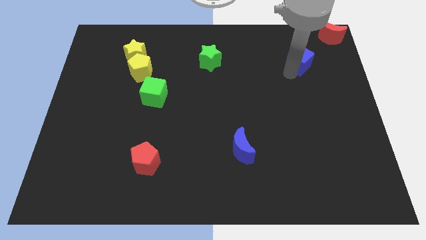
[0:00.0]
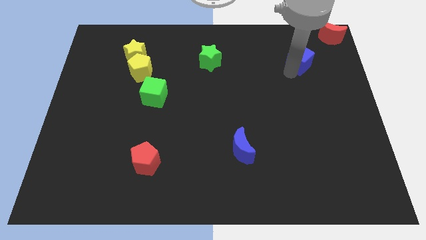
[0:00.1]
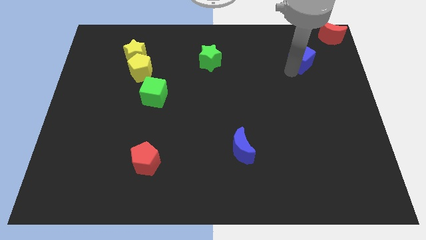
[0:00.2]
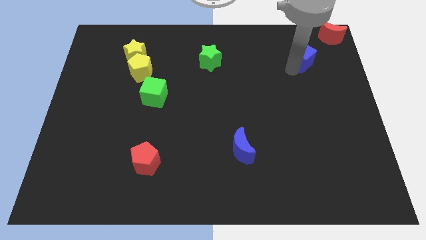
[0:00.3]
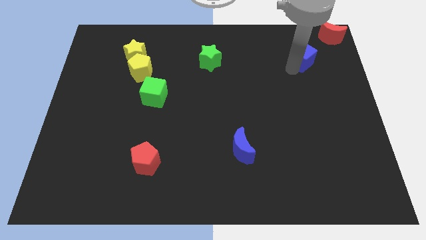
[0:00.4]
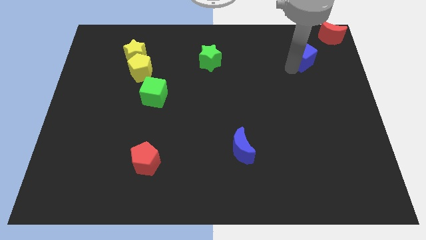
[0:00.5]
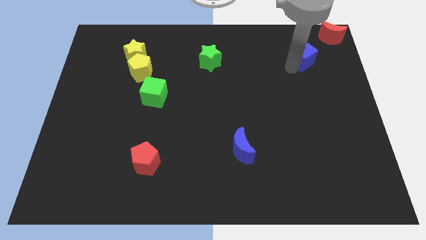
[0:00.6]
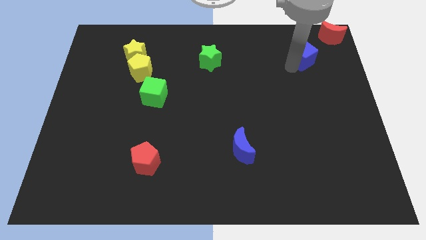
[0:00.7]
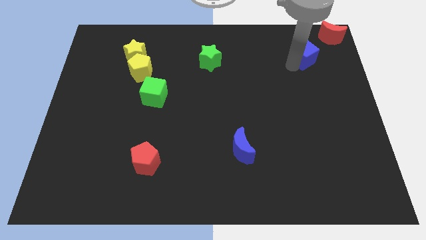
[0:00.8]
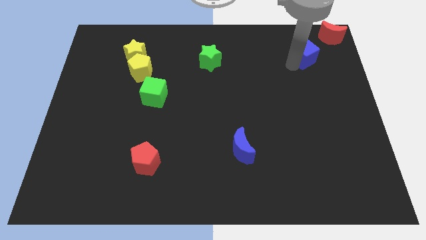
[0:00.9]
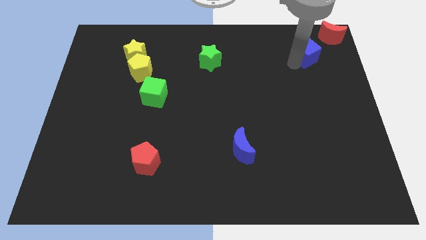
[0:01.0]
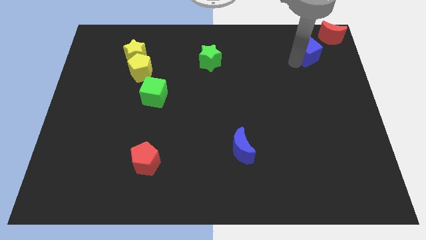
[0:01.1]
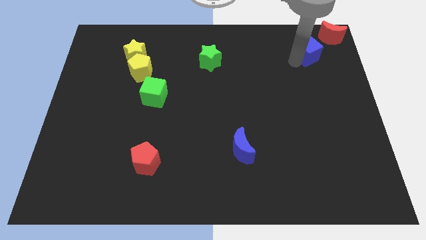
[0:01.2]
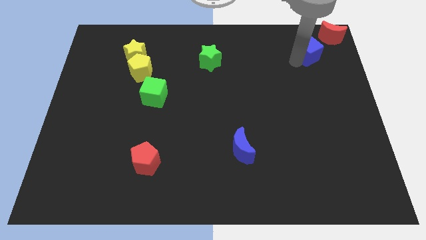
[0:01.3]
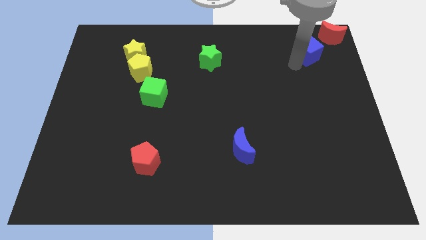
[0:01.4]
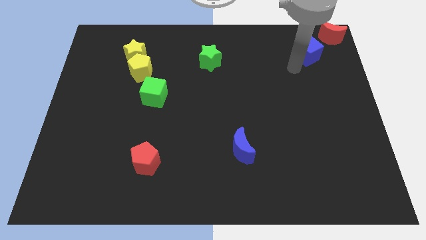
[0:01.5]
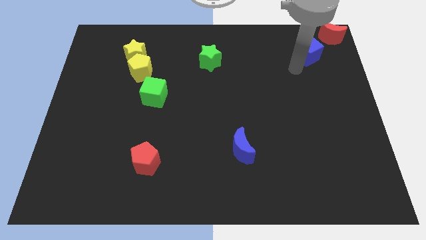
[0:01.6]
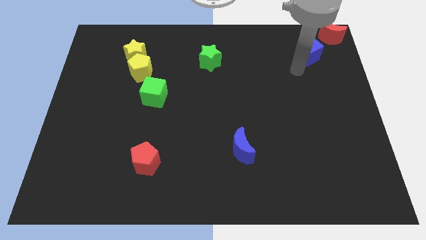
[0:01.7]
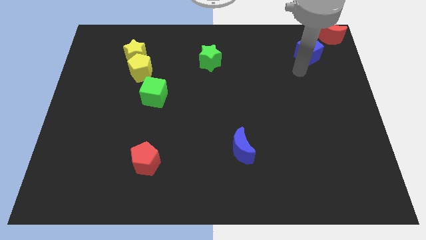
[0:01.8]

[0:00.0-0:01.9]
push the blue cube near to the red crescent

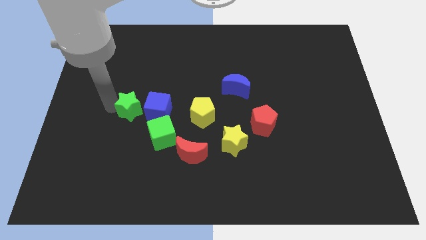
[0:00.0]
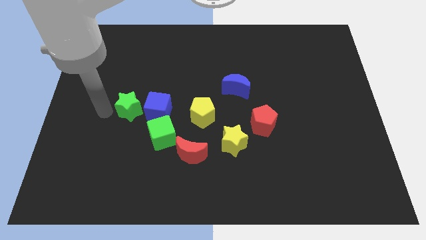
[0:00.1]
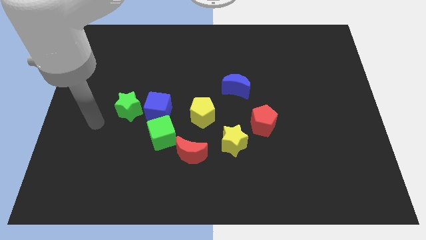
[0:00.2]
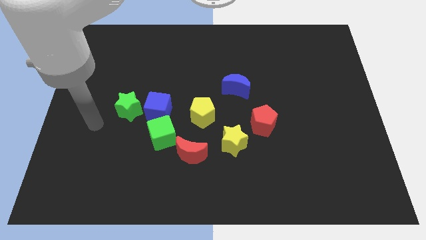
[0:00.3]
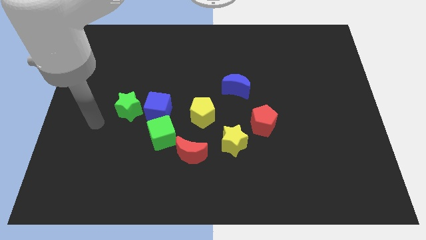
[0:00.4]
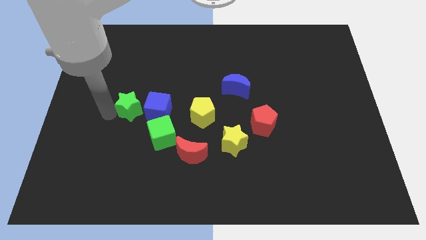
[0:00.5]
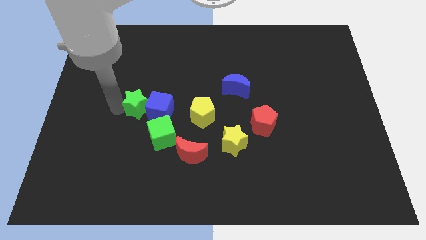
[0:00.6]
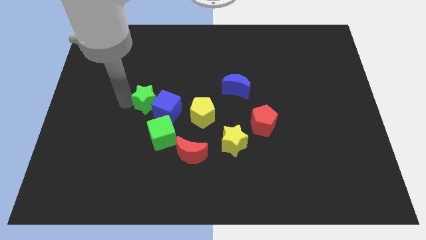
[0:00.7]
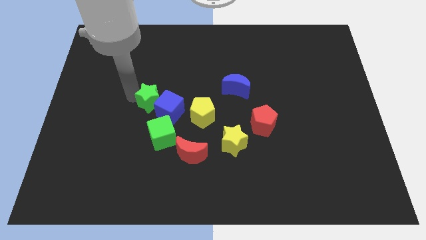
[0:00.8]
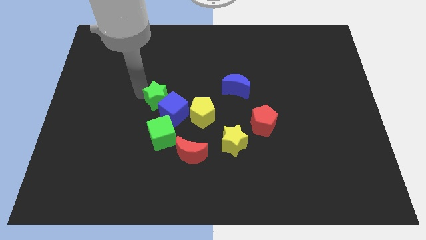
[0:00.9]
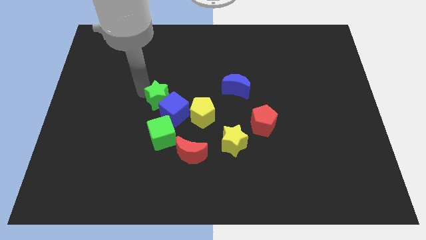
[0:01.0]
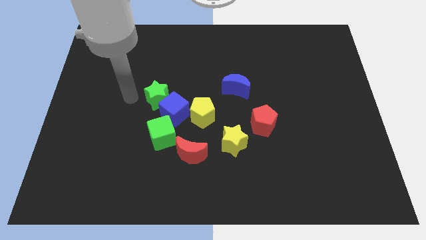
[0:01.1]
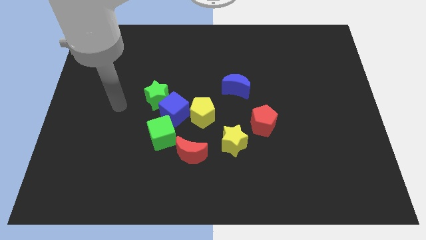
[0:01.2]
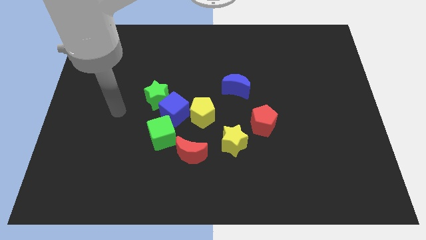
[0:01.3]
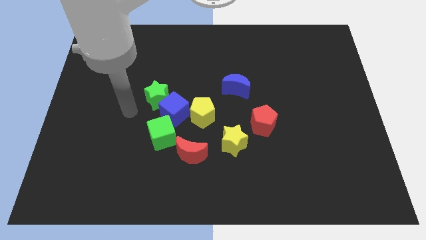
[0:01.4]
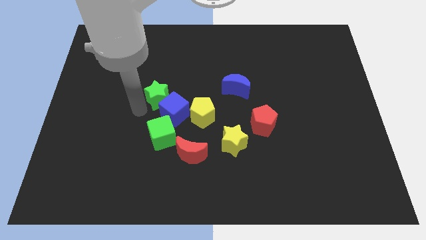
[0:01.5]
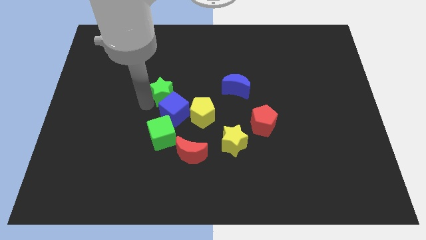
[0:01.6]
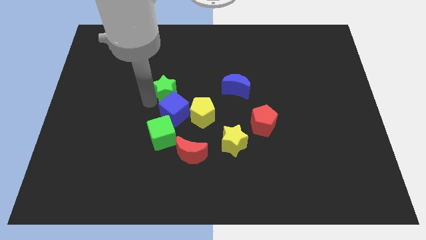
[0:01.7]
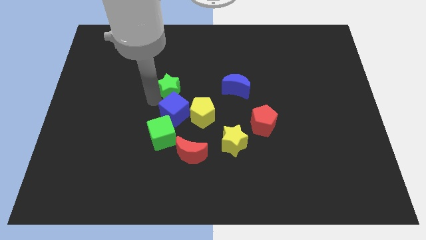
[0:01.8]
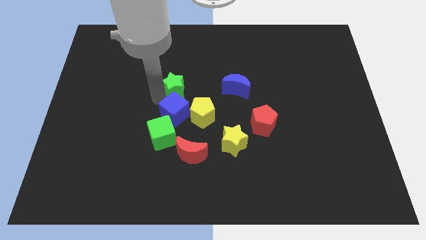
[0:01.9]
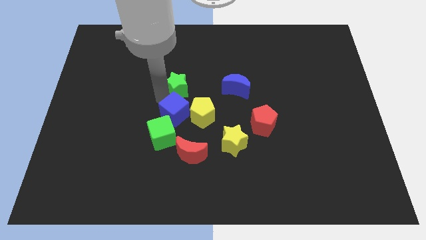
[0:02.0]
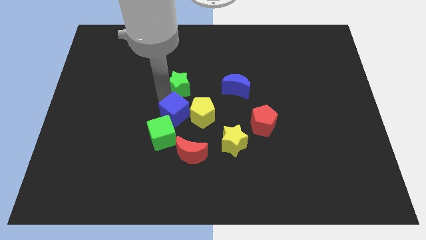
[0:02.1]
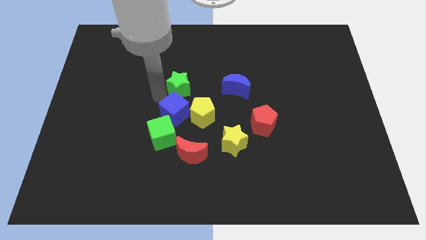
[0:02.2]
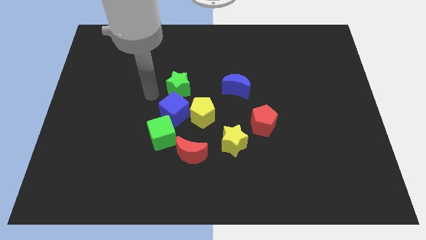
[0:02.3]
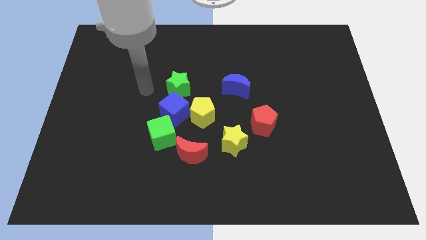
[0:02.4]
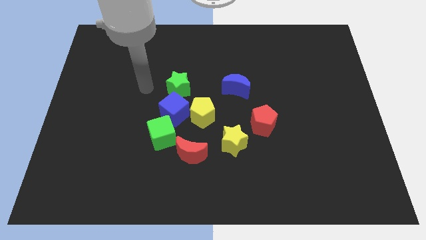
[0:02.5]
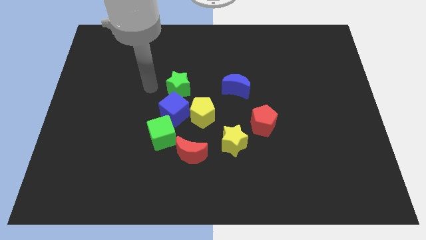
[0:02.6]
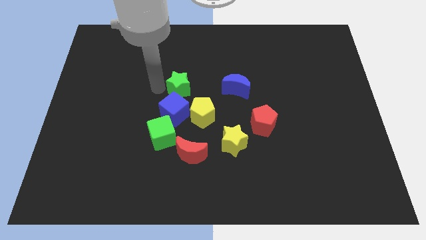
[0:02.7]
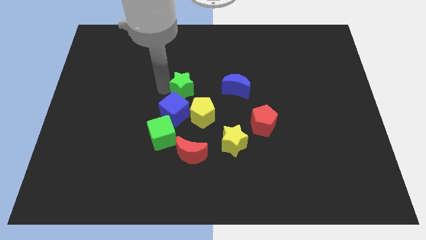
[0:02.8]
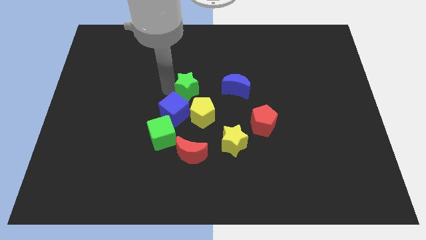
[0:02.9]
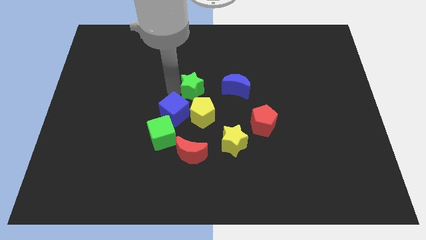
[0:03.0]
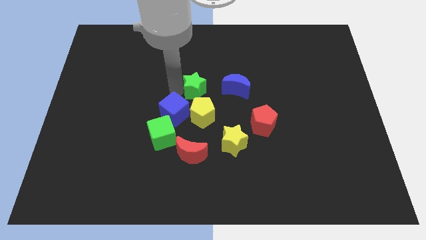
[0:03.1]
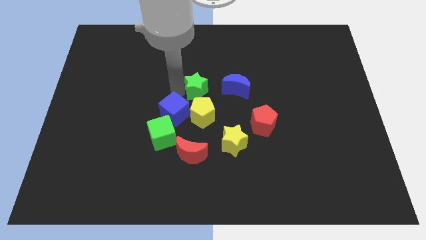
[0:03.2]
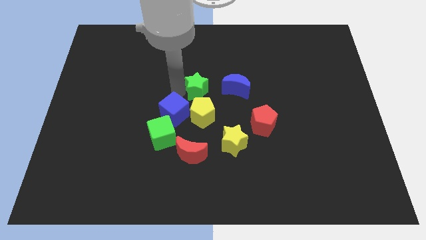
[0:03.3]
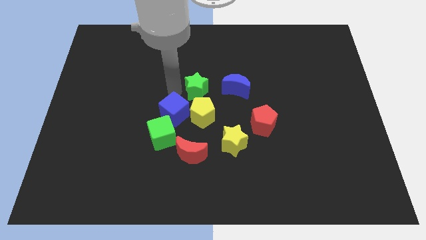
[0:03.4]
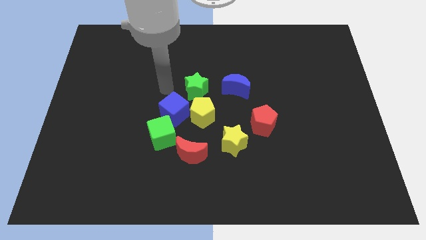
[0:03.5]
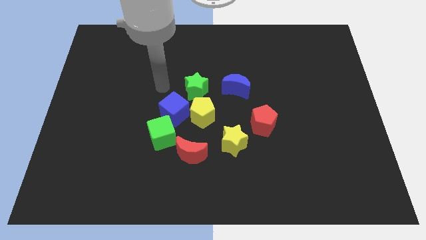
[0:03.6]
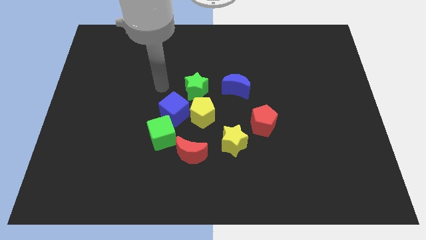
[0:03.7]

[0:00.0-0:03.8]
slide the green star diagonally top right to the blue cube

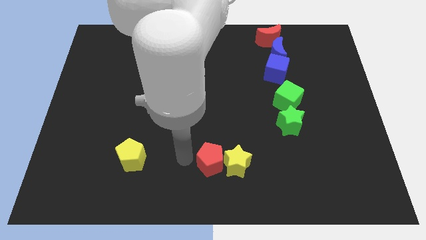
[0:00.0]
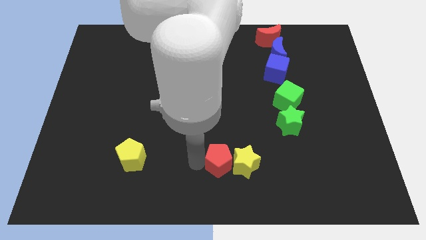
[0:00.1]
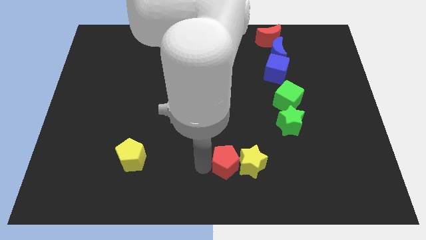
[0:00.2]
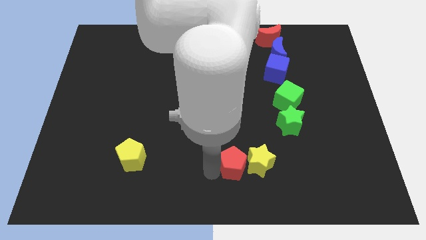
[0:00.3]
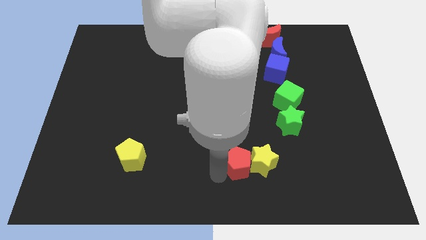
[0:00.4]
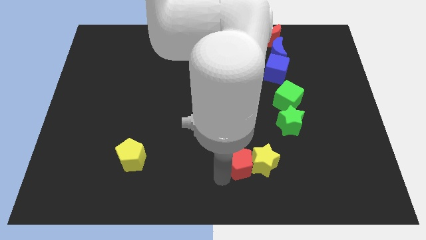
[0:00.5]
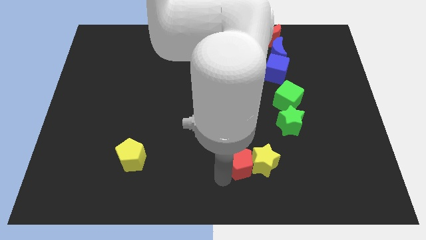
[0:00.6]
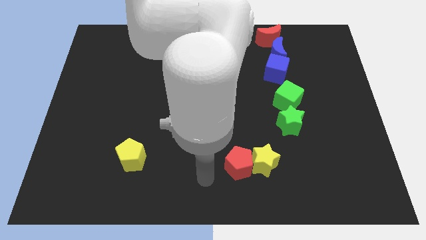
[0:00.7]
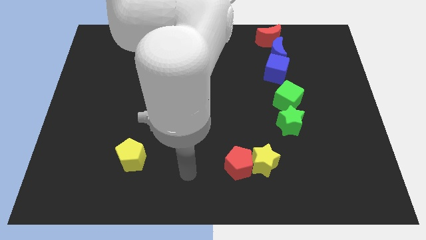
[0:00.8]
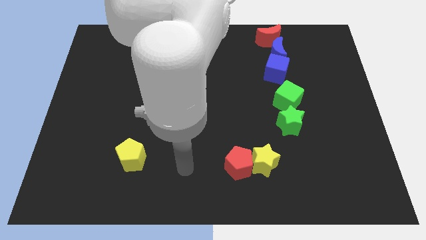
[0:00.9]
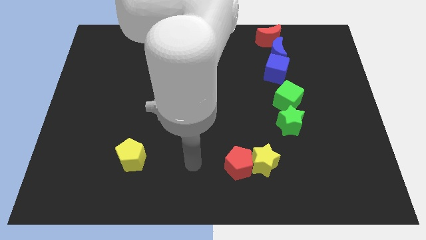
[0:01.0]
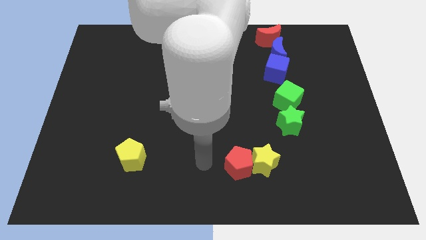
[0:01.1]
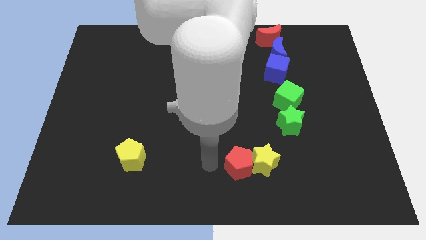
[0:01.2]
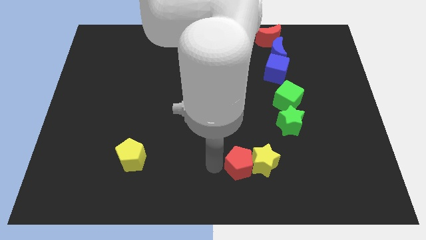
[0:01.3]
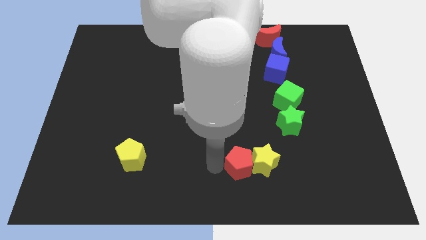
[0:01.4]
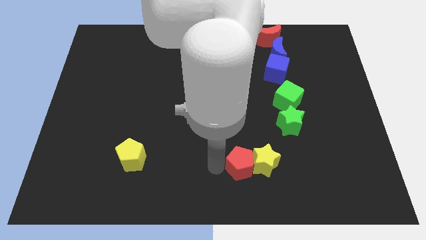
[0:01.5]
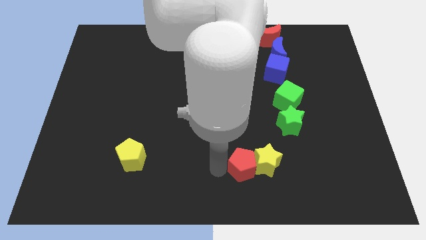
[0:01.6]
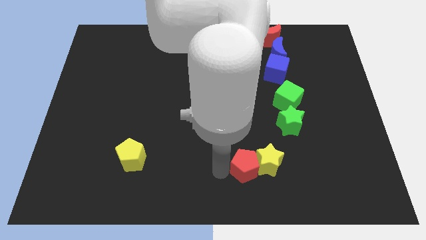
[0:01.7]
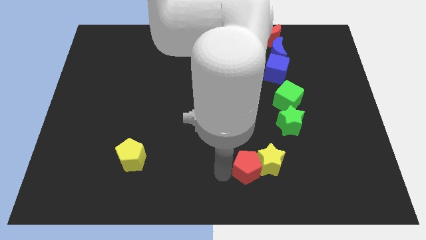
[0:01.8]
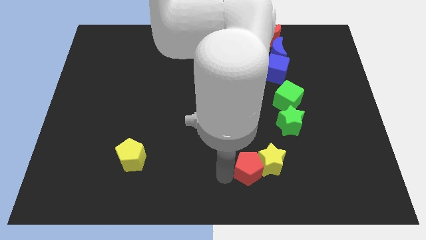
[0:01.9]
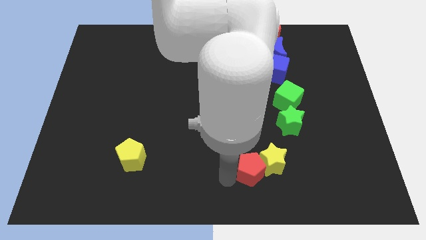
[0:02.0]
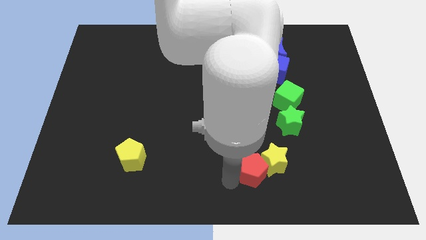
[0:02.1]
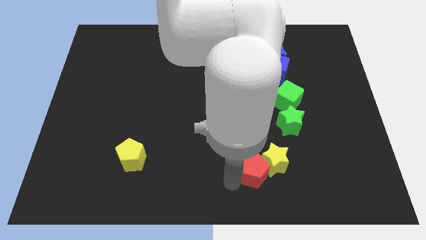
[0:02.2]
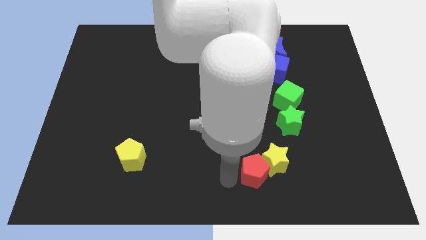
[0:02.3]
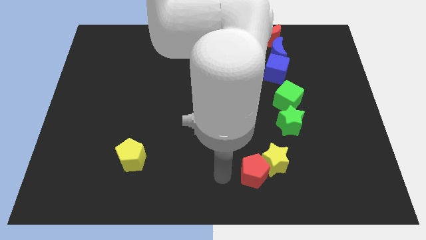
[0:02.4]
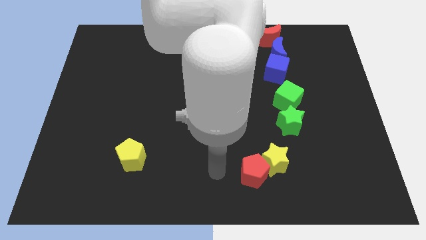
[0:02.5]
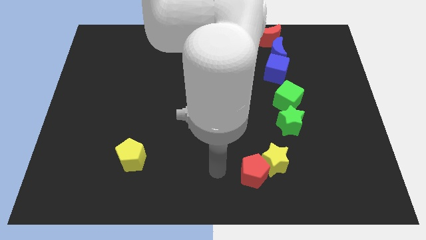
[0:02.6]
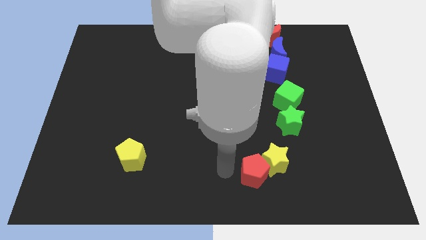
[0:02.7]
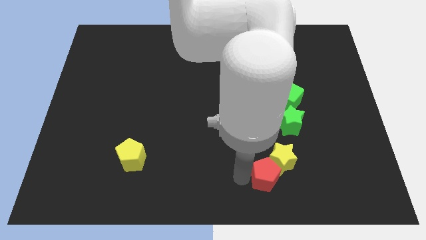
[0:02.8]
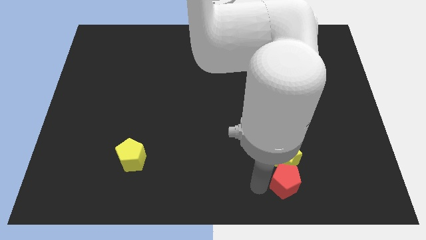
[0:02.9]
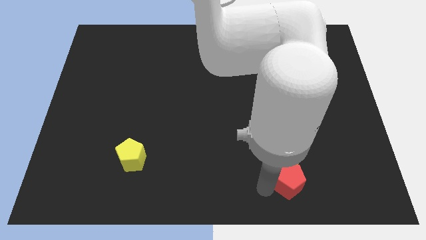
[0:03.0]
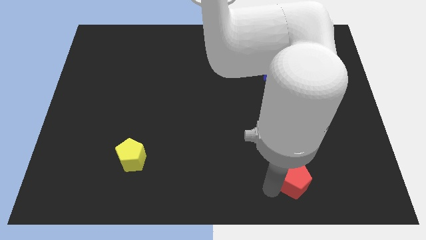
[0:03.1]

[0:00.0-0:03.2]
place the red pentagon along with yellow star at bottom of the green star

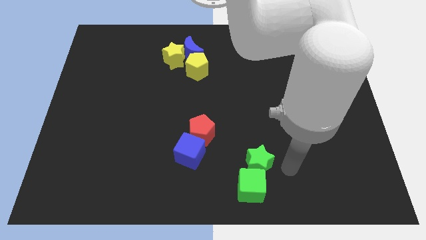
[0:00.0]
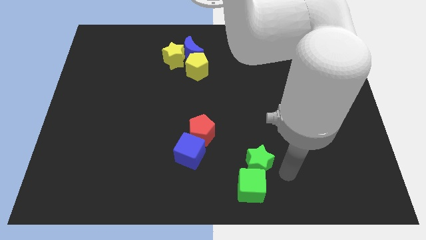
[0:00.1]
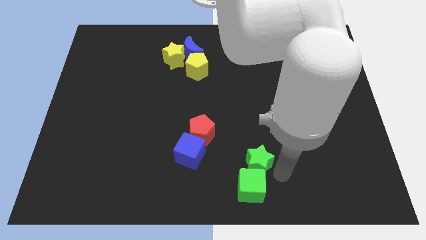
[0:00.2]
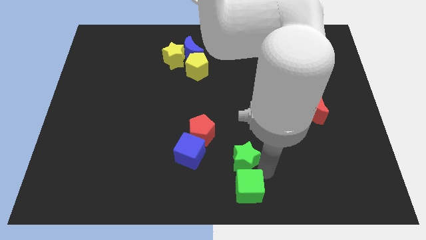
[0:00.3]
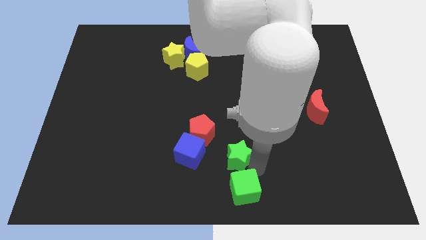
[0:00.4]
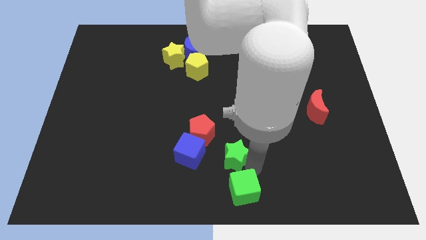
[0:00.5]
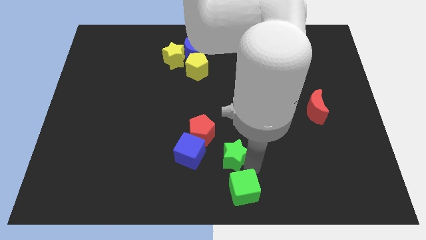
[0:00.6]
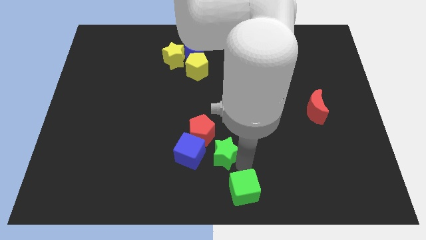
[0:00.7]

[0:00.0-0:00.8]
move green star towards blue cube
